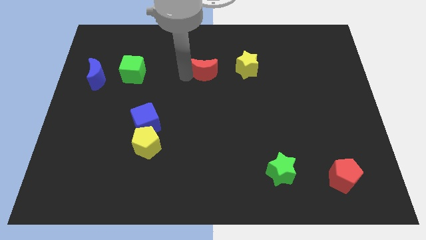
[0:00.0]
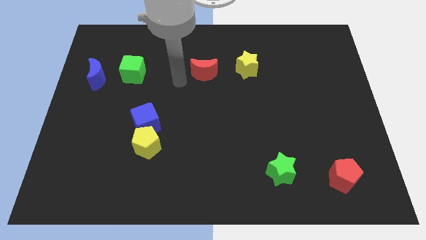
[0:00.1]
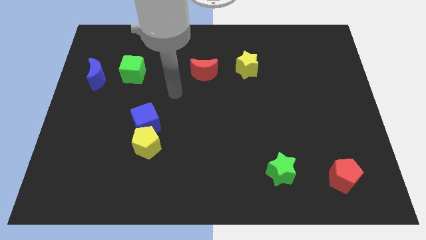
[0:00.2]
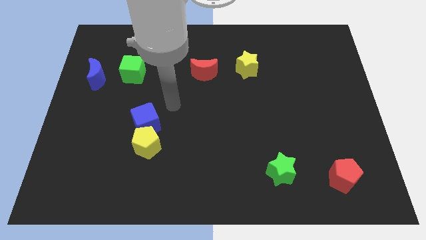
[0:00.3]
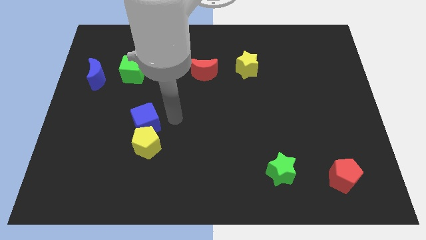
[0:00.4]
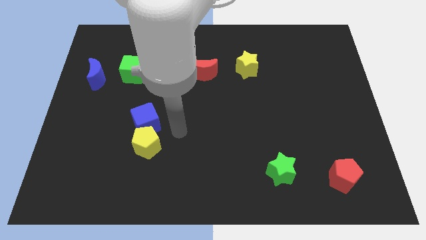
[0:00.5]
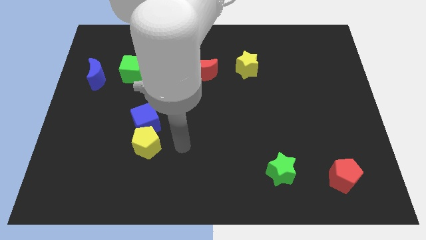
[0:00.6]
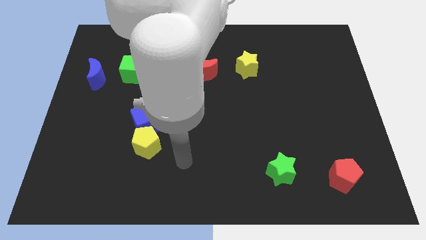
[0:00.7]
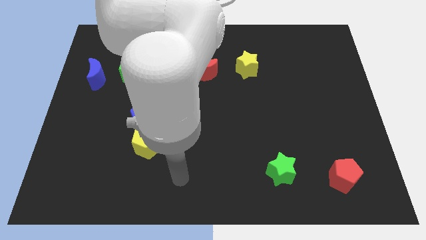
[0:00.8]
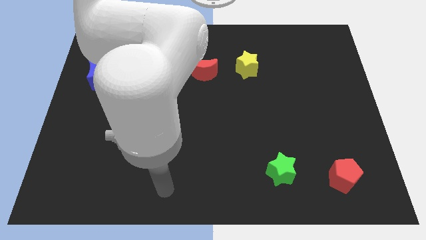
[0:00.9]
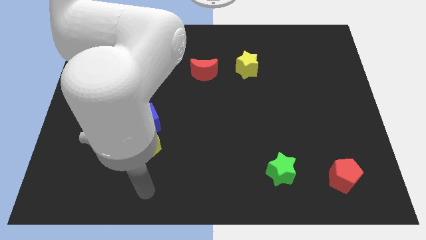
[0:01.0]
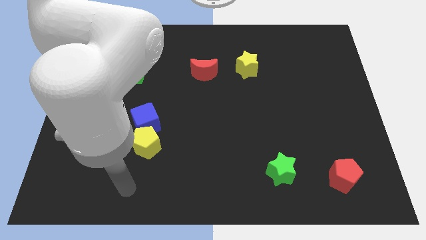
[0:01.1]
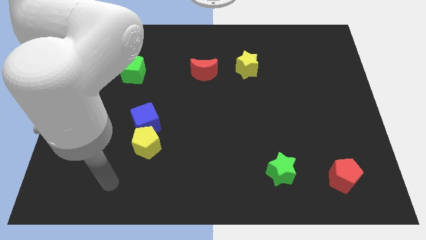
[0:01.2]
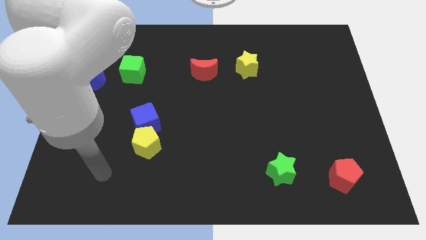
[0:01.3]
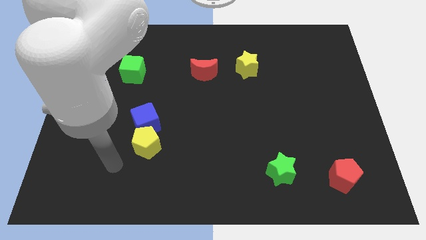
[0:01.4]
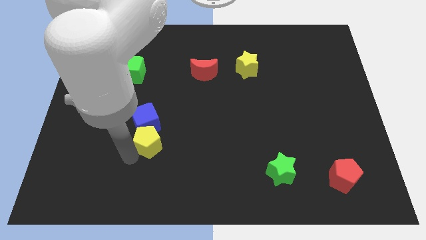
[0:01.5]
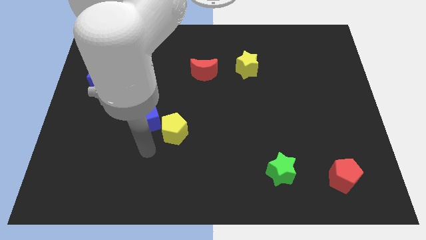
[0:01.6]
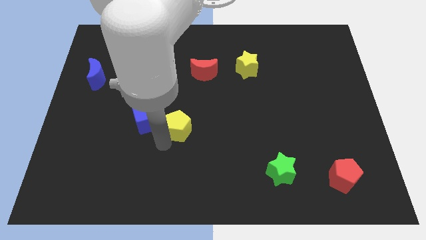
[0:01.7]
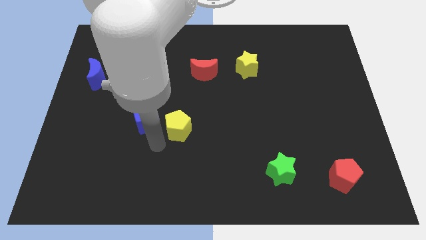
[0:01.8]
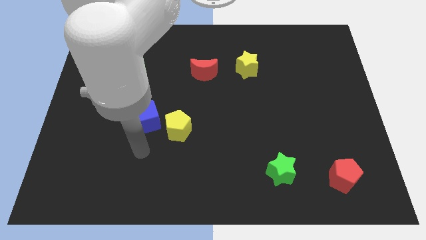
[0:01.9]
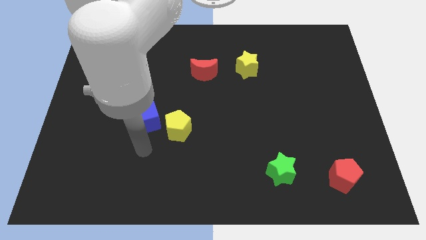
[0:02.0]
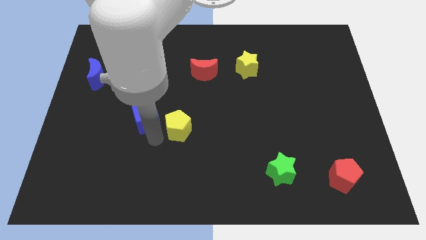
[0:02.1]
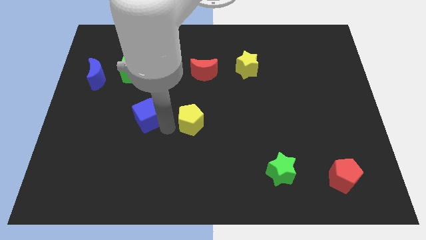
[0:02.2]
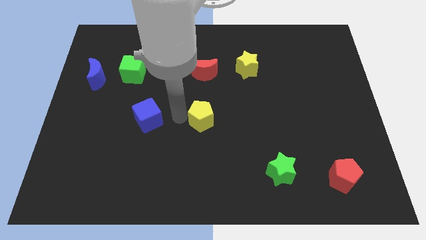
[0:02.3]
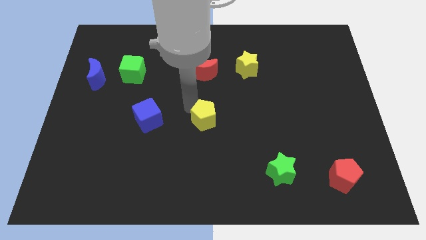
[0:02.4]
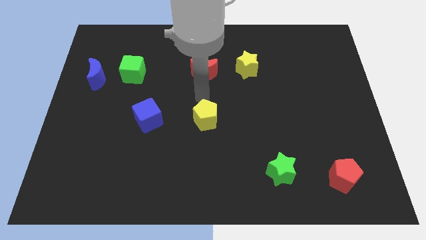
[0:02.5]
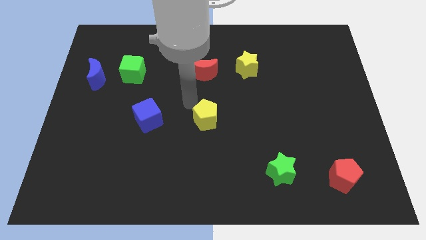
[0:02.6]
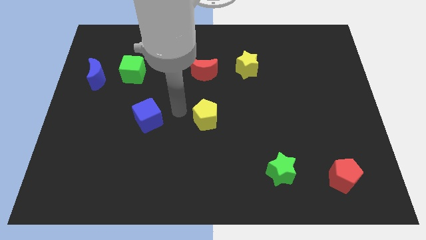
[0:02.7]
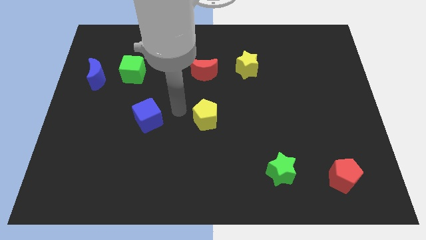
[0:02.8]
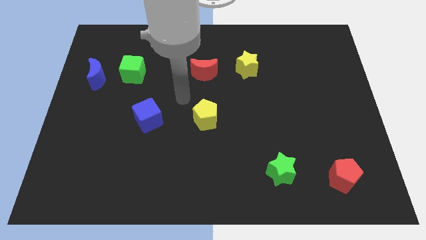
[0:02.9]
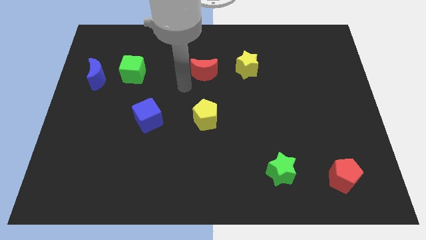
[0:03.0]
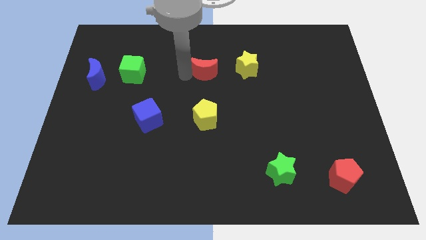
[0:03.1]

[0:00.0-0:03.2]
move the yellow pentagon to the right of the blue cube

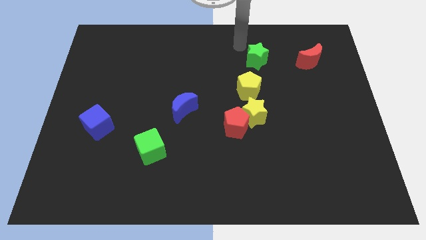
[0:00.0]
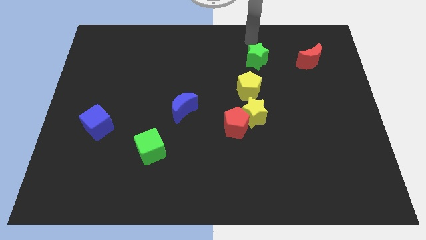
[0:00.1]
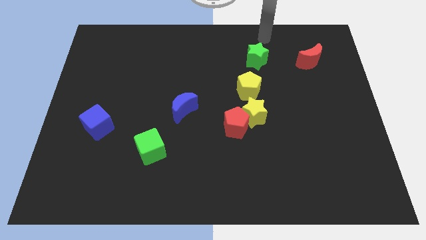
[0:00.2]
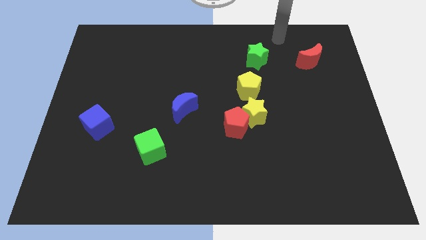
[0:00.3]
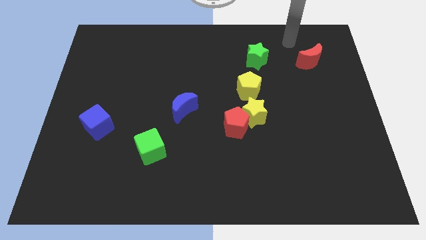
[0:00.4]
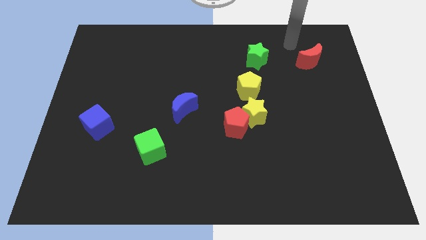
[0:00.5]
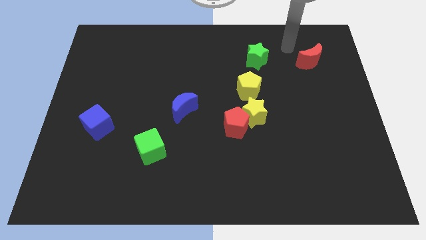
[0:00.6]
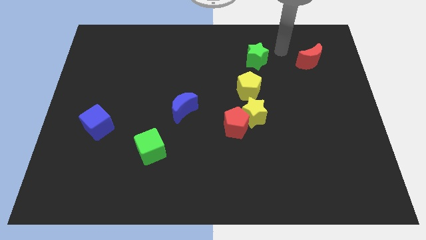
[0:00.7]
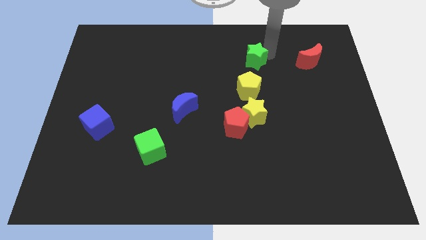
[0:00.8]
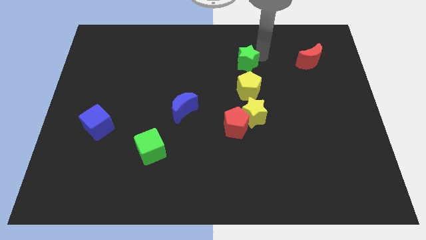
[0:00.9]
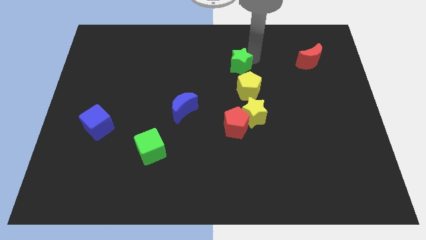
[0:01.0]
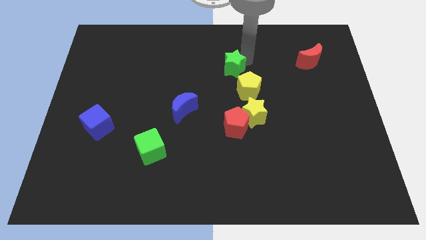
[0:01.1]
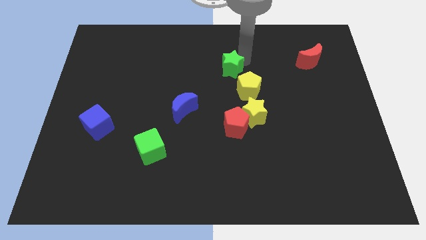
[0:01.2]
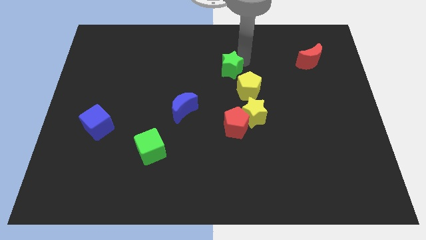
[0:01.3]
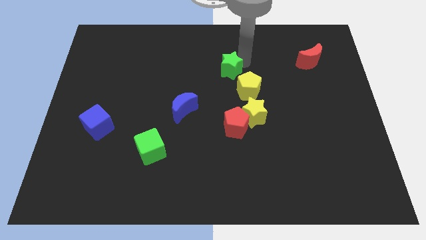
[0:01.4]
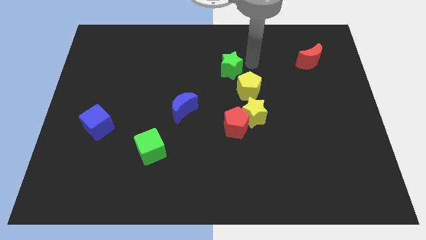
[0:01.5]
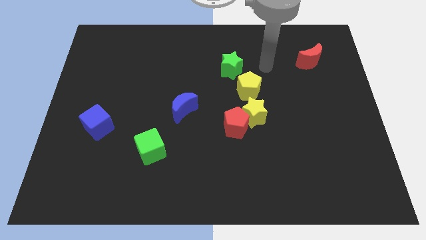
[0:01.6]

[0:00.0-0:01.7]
place the green star close to the yellow pentagon

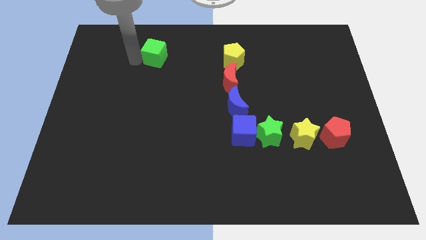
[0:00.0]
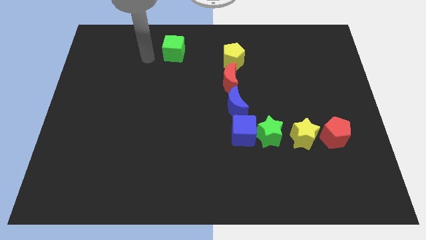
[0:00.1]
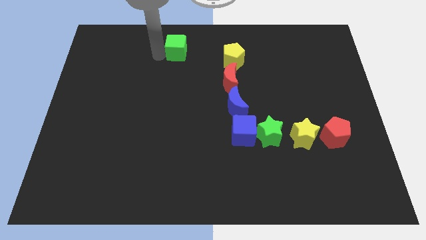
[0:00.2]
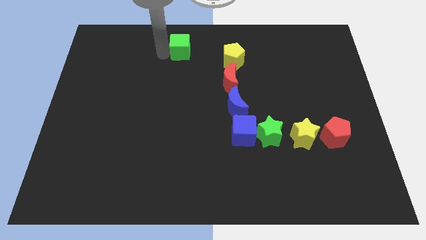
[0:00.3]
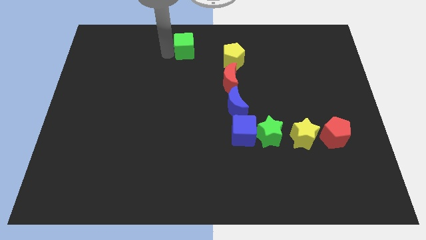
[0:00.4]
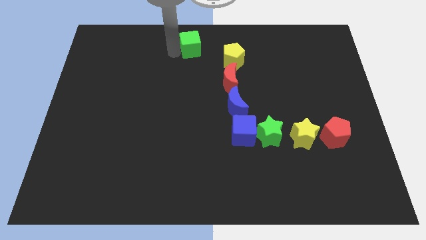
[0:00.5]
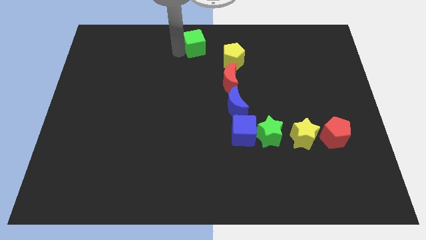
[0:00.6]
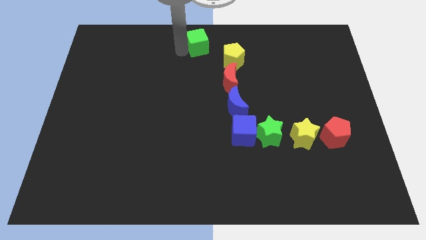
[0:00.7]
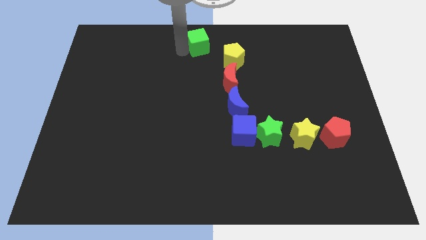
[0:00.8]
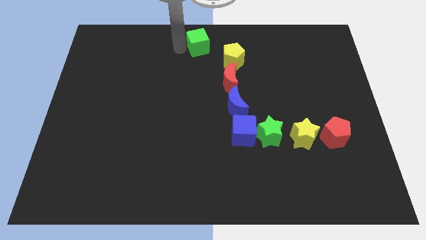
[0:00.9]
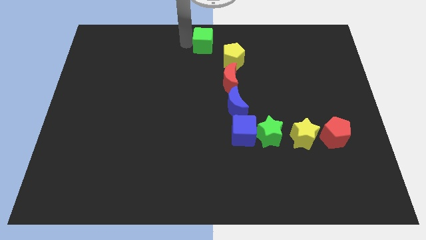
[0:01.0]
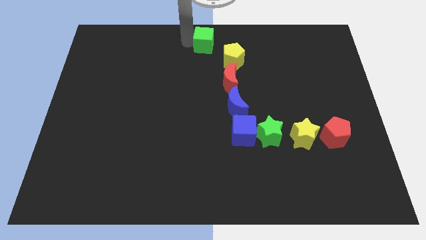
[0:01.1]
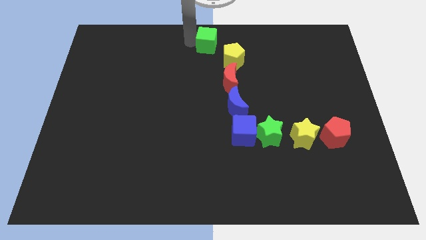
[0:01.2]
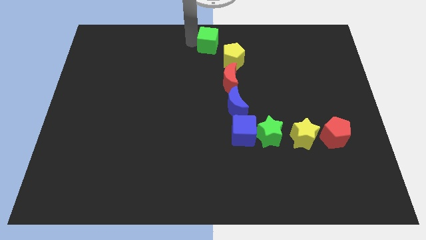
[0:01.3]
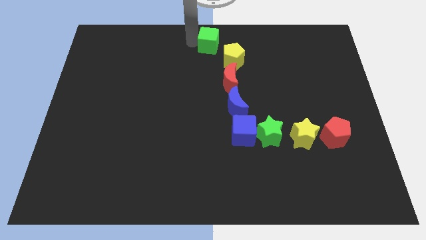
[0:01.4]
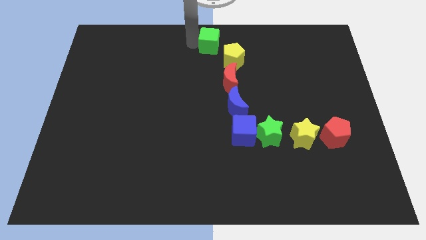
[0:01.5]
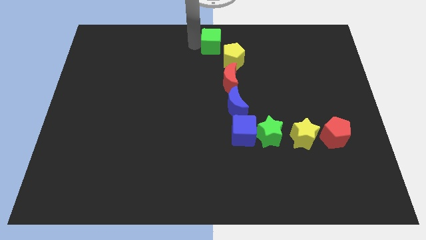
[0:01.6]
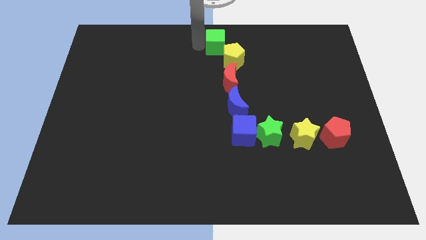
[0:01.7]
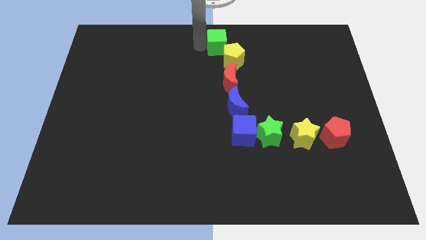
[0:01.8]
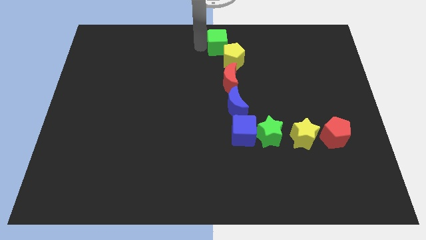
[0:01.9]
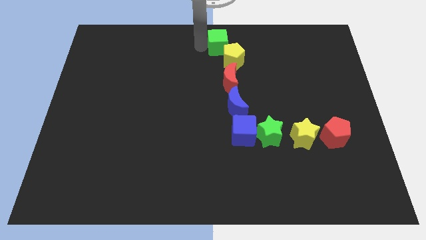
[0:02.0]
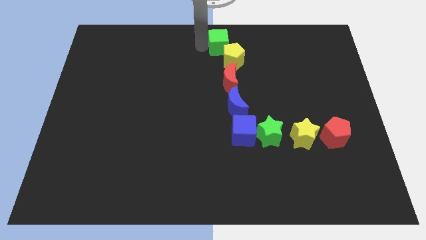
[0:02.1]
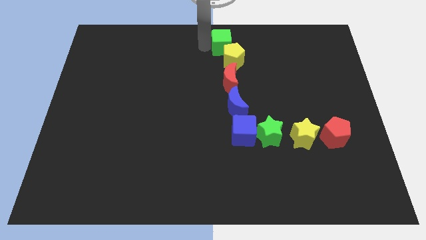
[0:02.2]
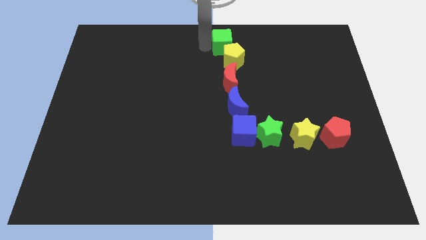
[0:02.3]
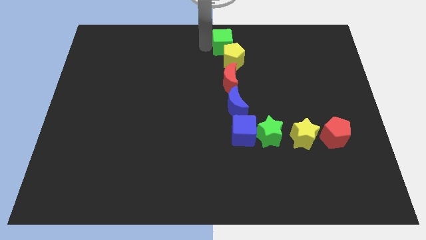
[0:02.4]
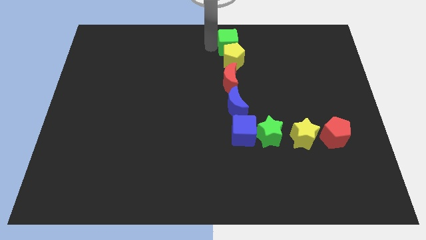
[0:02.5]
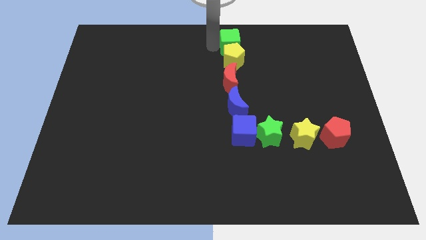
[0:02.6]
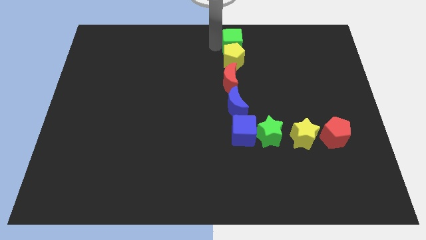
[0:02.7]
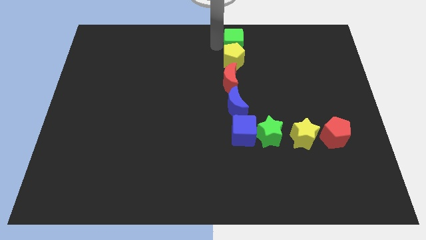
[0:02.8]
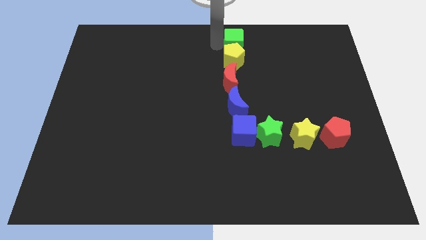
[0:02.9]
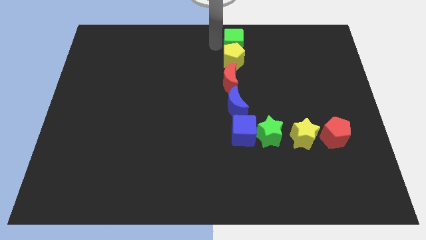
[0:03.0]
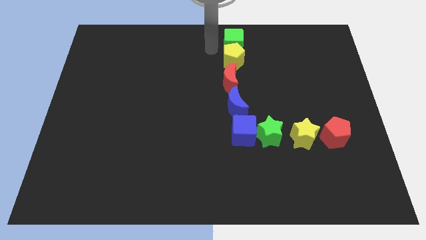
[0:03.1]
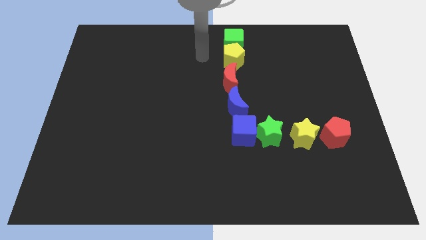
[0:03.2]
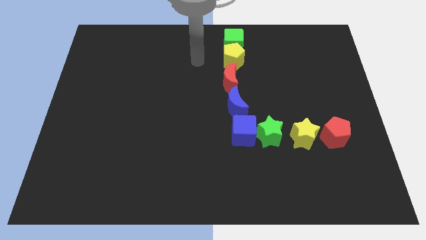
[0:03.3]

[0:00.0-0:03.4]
move the green cube to form a vertical line

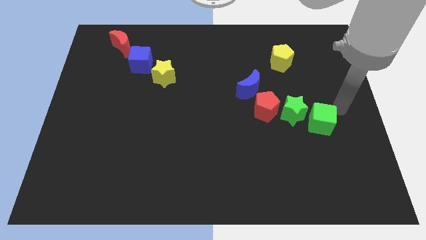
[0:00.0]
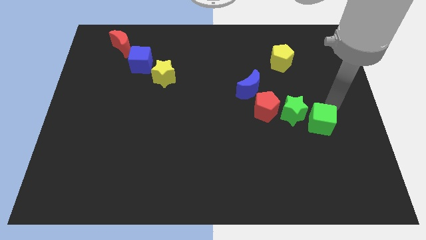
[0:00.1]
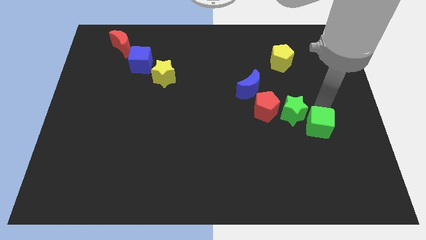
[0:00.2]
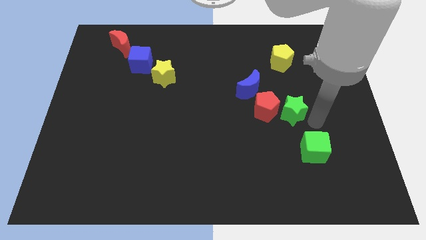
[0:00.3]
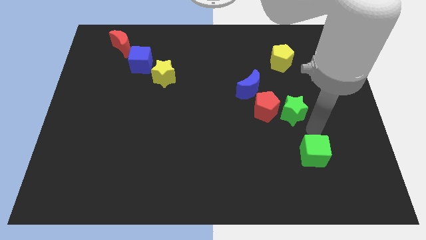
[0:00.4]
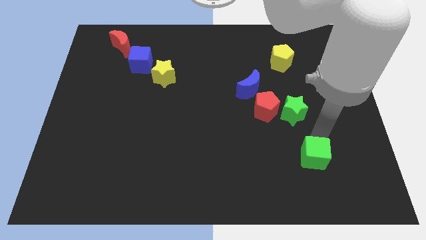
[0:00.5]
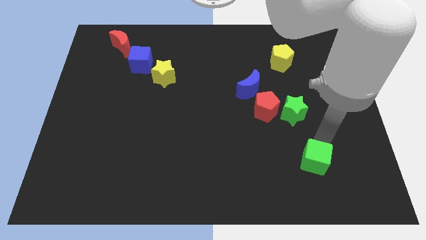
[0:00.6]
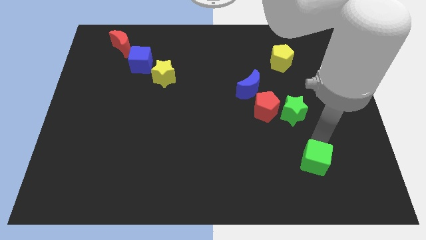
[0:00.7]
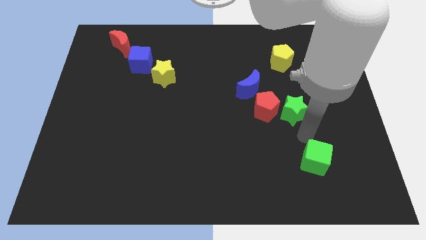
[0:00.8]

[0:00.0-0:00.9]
push the green cube to the down
